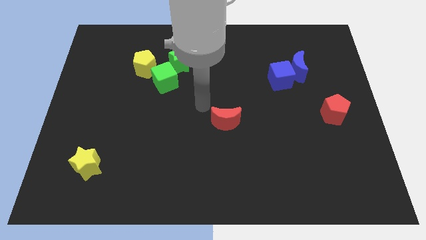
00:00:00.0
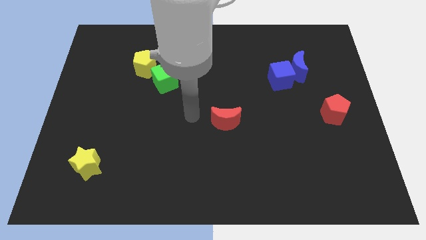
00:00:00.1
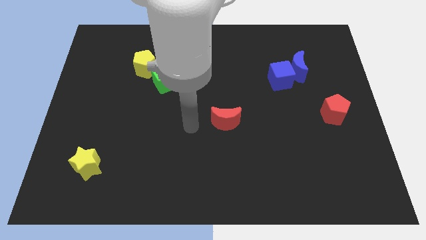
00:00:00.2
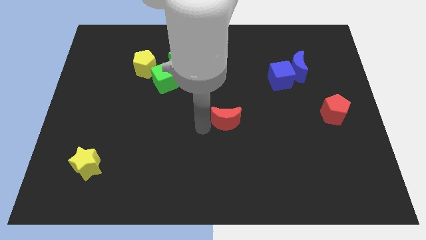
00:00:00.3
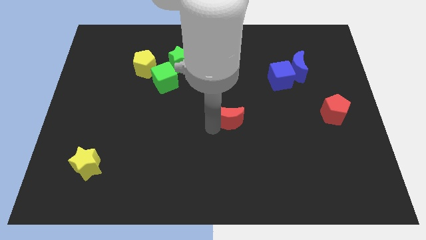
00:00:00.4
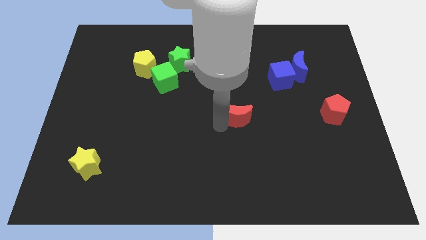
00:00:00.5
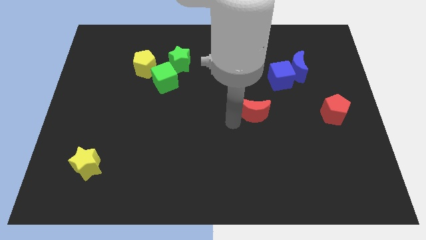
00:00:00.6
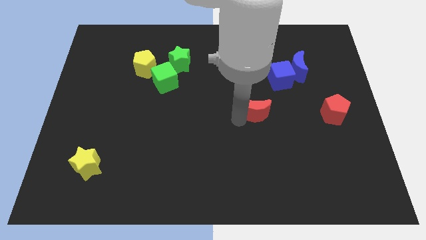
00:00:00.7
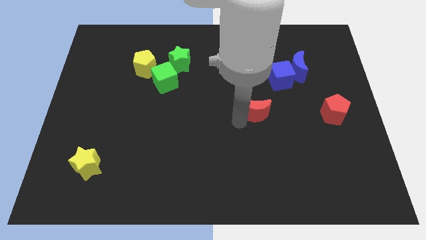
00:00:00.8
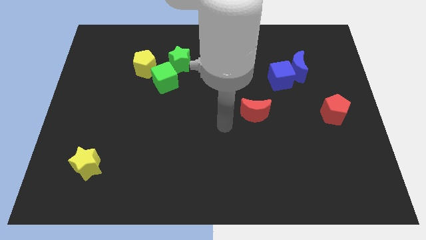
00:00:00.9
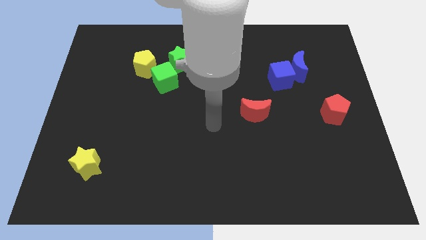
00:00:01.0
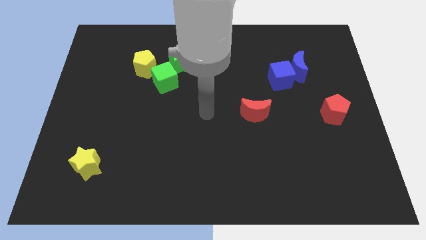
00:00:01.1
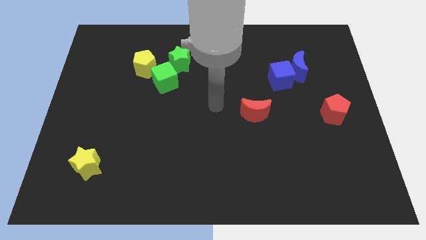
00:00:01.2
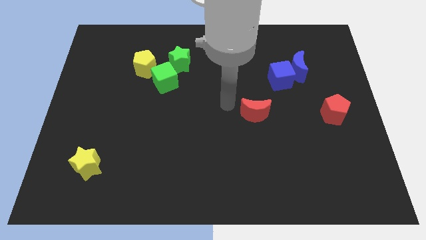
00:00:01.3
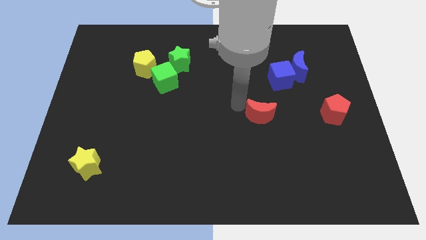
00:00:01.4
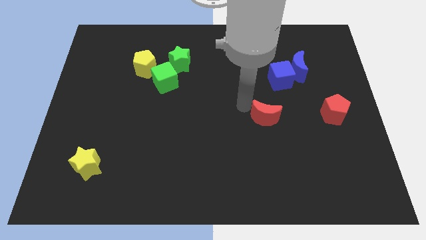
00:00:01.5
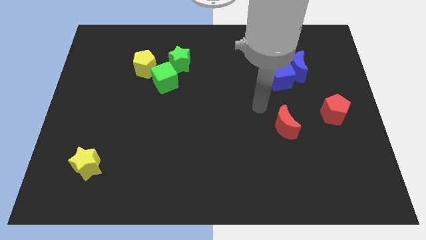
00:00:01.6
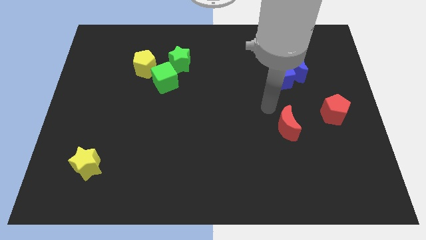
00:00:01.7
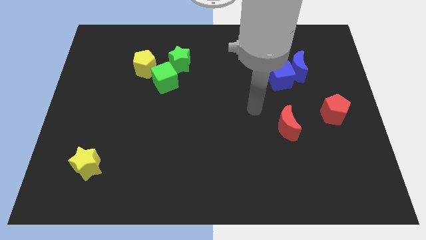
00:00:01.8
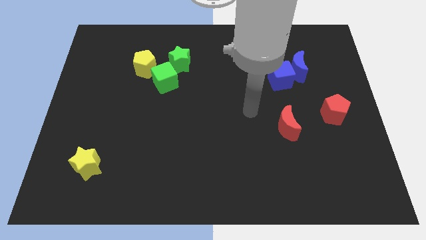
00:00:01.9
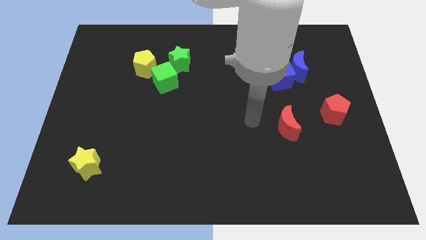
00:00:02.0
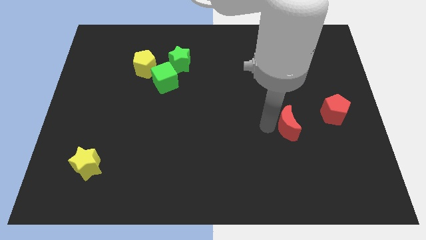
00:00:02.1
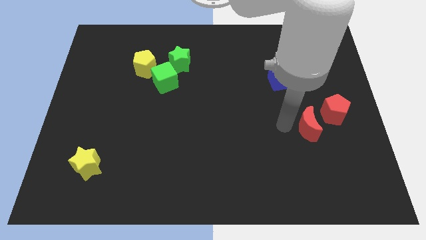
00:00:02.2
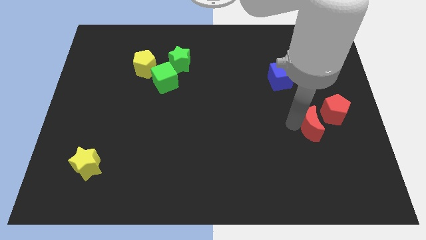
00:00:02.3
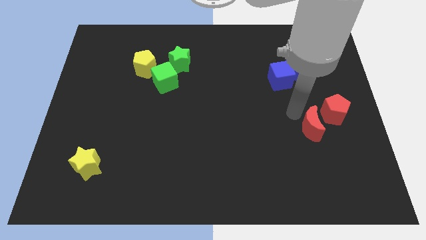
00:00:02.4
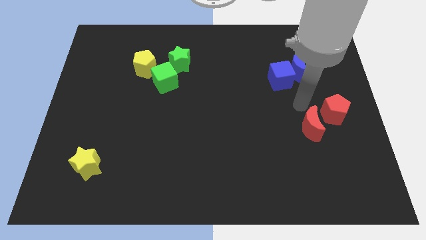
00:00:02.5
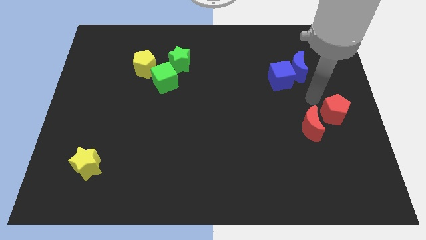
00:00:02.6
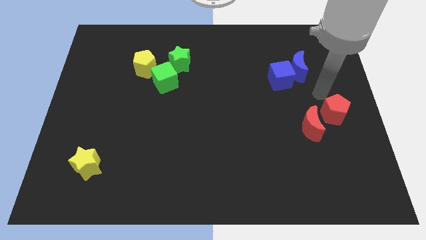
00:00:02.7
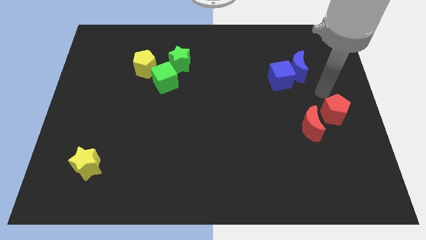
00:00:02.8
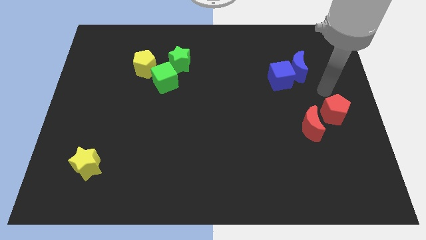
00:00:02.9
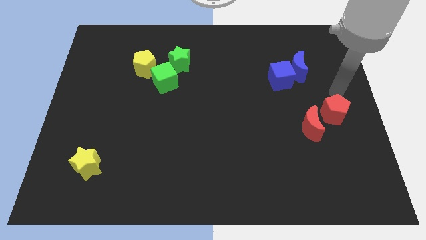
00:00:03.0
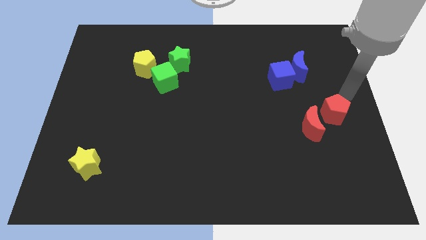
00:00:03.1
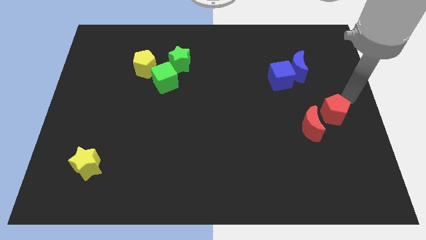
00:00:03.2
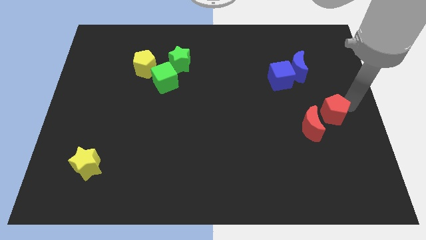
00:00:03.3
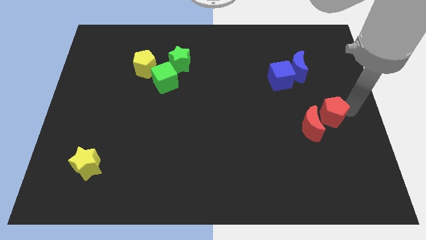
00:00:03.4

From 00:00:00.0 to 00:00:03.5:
place the red moon to the left side of red pentagon

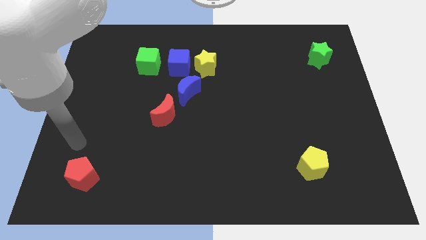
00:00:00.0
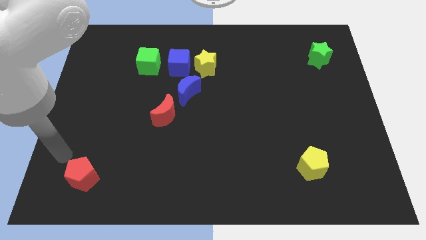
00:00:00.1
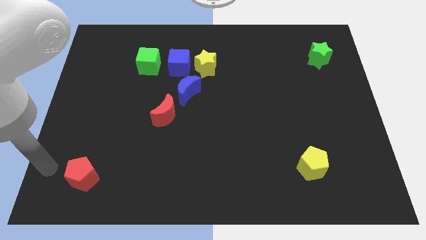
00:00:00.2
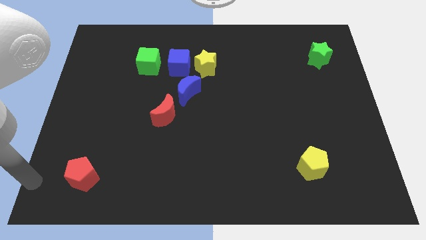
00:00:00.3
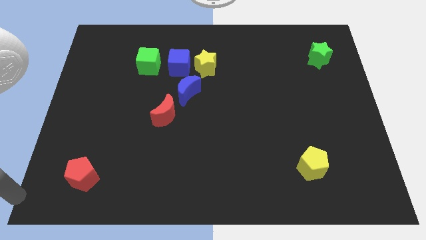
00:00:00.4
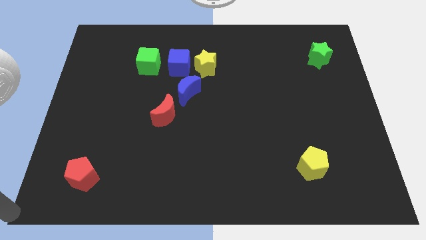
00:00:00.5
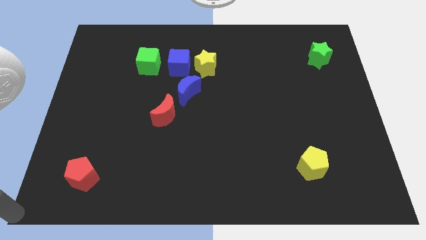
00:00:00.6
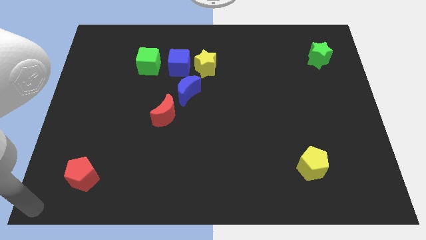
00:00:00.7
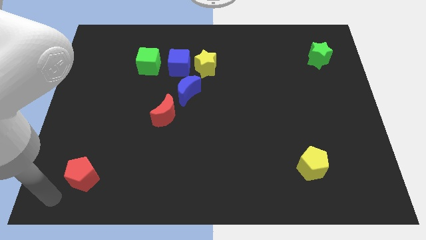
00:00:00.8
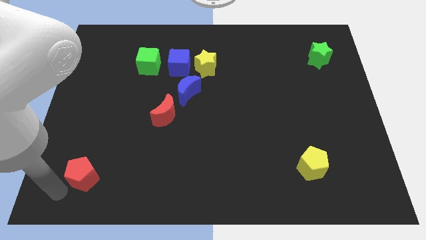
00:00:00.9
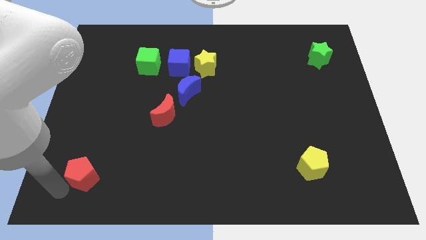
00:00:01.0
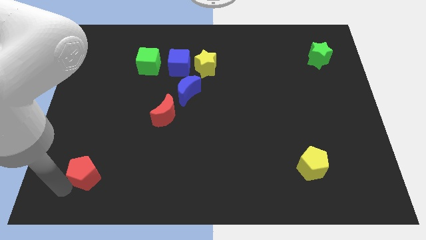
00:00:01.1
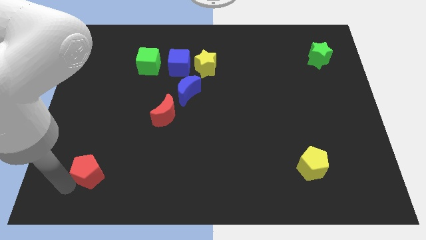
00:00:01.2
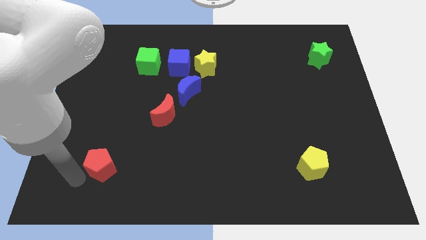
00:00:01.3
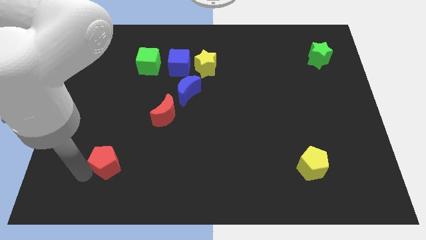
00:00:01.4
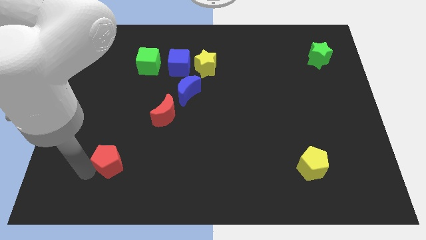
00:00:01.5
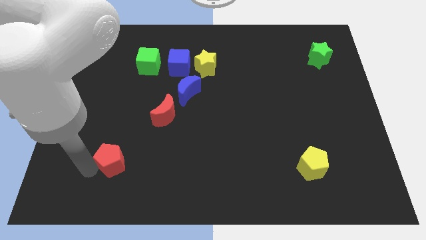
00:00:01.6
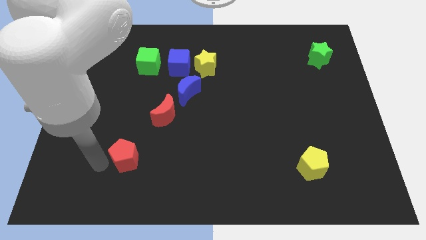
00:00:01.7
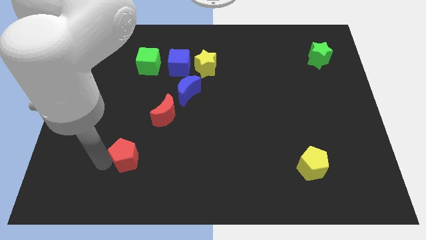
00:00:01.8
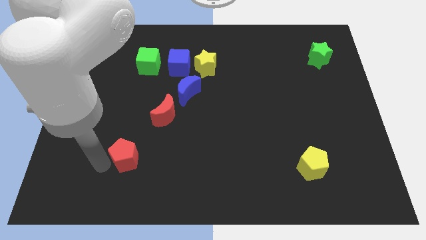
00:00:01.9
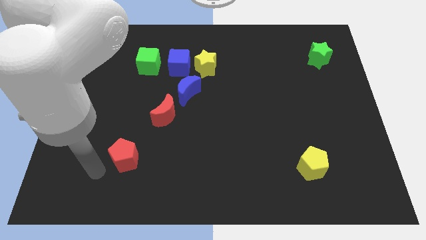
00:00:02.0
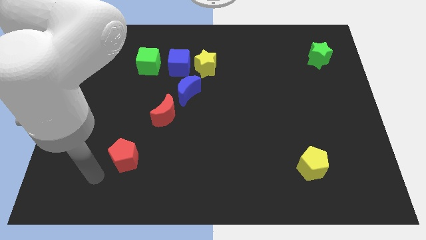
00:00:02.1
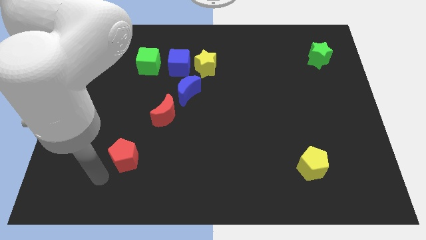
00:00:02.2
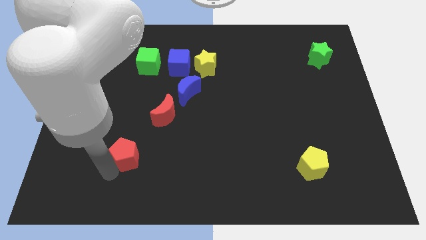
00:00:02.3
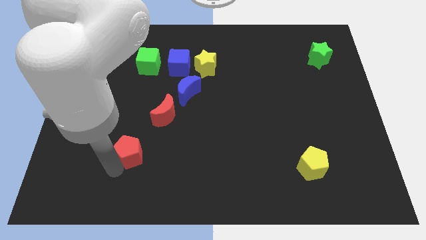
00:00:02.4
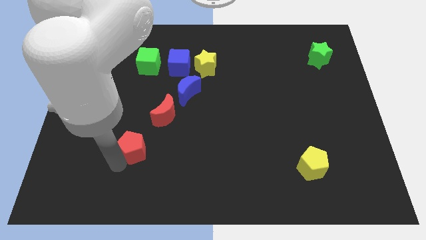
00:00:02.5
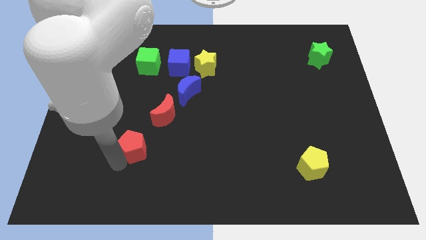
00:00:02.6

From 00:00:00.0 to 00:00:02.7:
place the red pentagon diagonally bottom left to the red moon

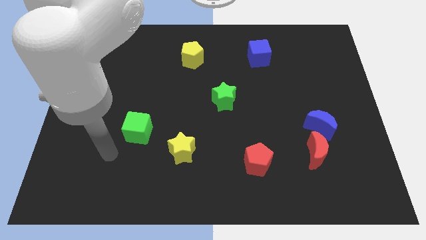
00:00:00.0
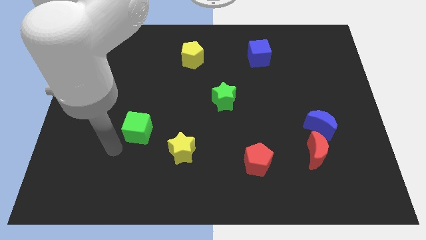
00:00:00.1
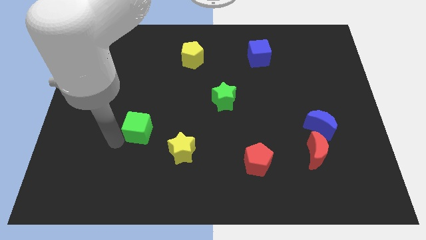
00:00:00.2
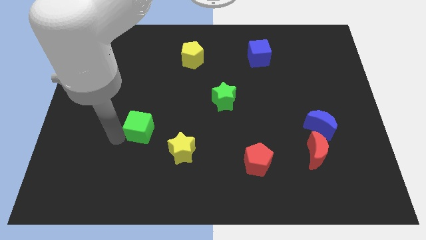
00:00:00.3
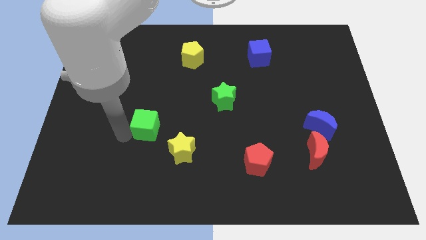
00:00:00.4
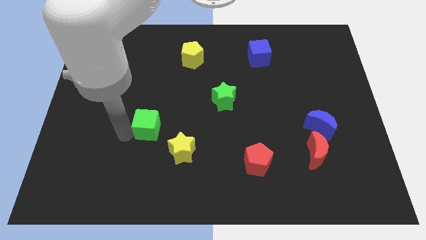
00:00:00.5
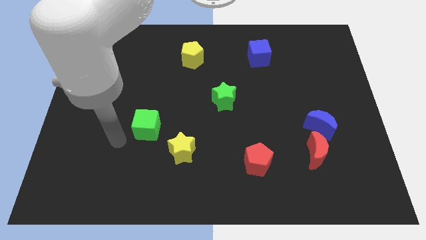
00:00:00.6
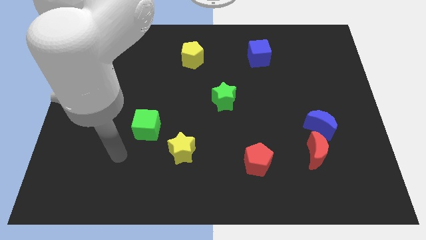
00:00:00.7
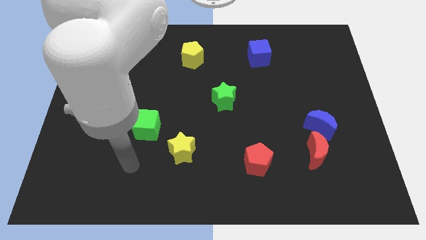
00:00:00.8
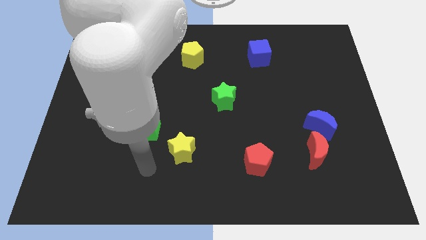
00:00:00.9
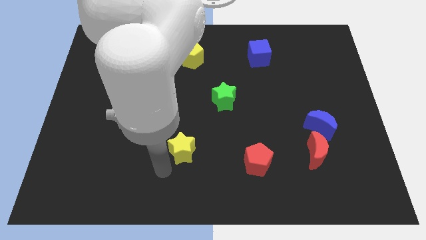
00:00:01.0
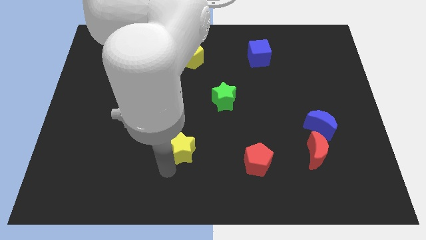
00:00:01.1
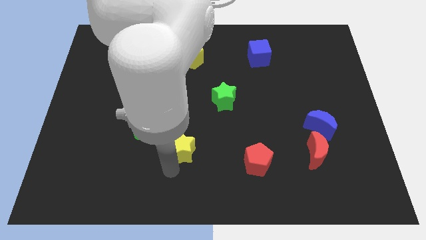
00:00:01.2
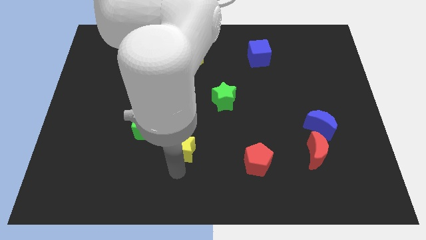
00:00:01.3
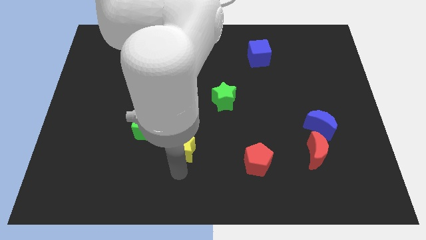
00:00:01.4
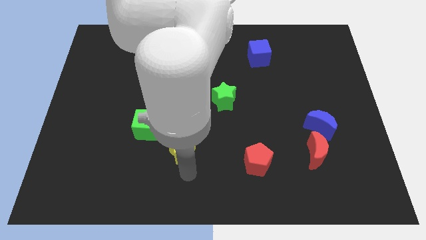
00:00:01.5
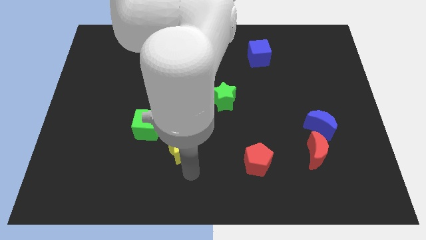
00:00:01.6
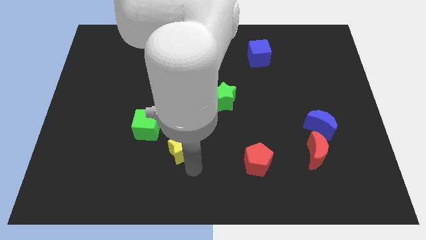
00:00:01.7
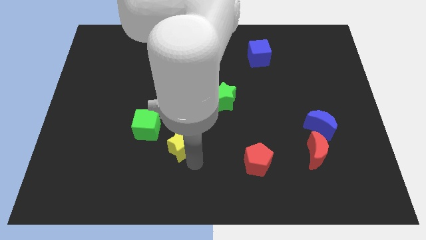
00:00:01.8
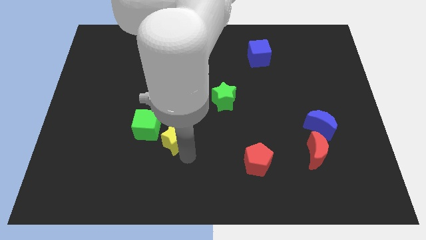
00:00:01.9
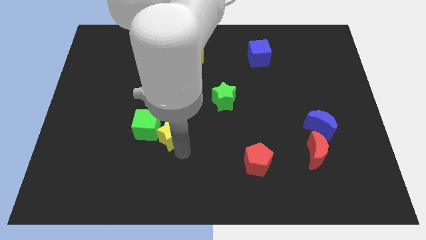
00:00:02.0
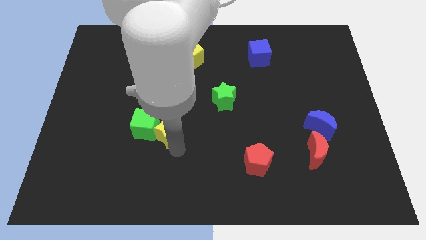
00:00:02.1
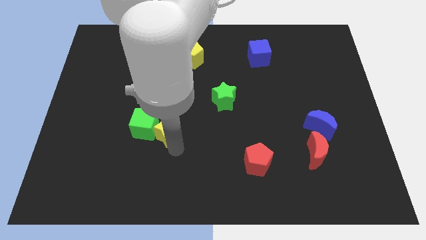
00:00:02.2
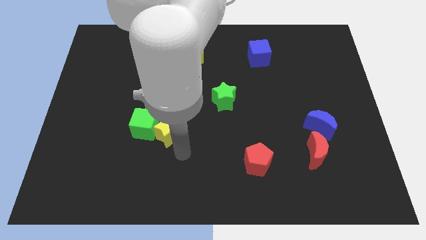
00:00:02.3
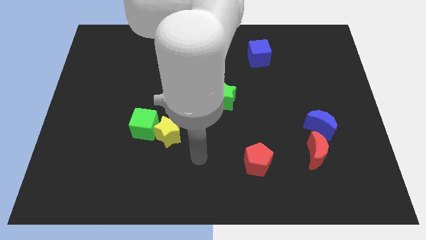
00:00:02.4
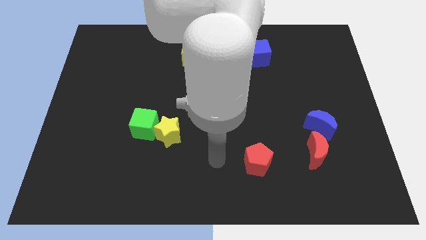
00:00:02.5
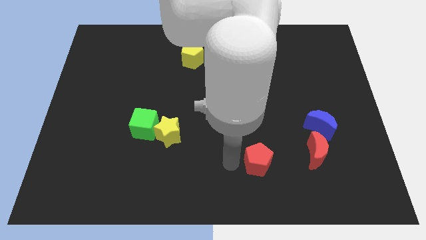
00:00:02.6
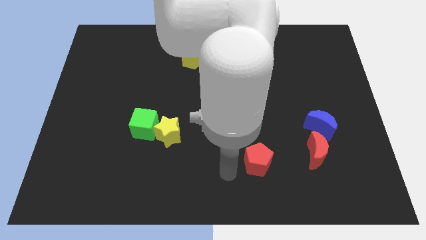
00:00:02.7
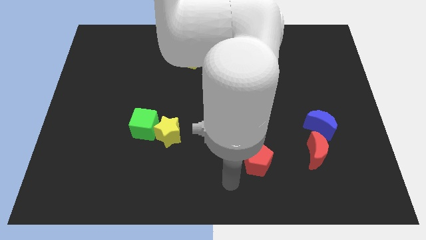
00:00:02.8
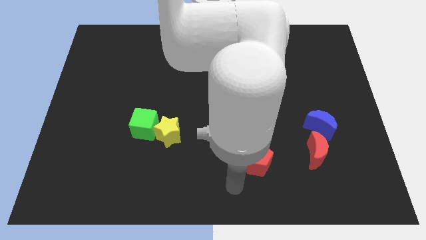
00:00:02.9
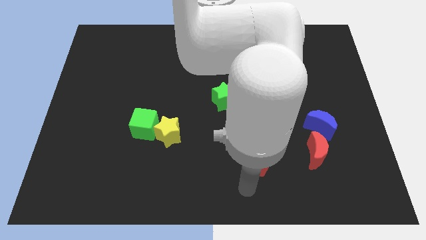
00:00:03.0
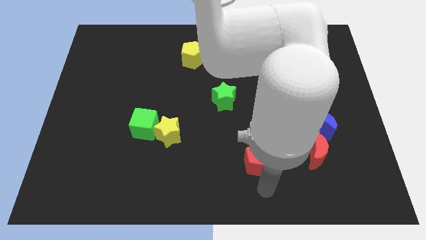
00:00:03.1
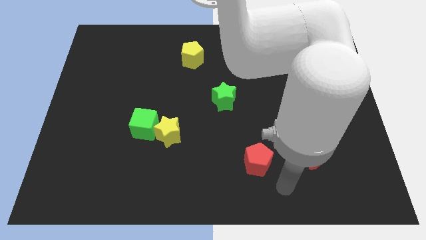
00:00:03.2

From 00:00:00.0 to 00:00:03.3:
push the yellow star close to the green cube
